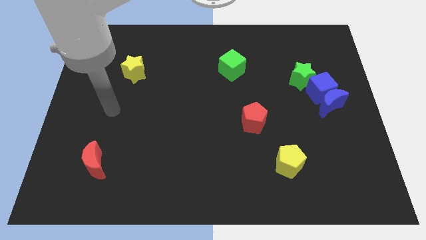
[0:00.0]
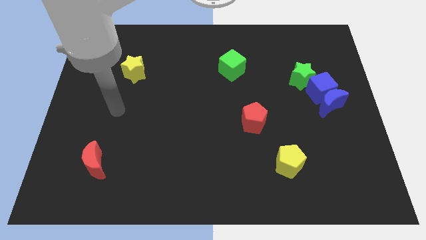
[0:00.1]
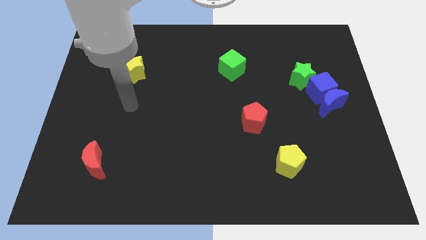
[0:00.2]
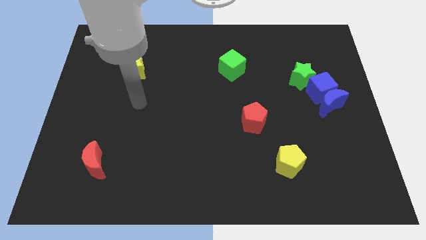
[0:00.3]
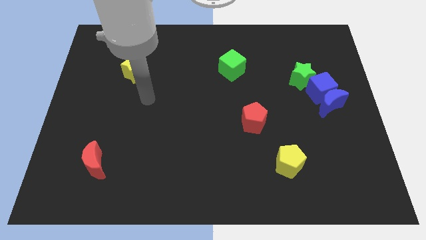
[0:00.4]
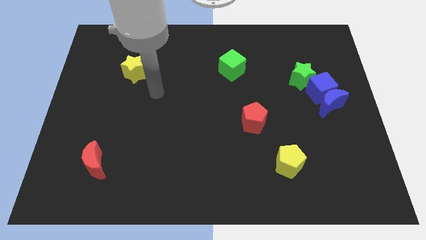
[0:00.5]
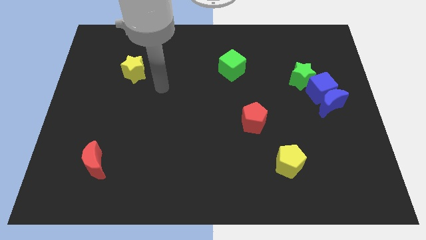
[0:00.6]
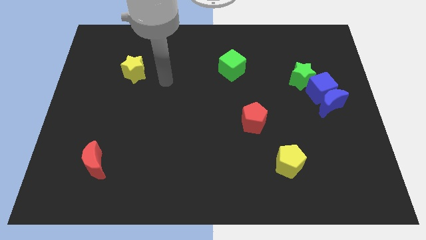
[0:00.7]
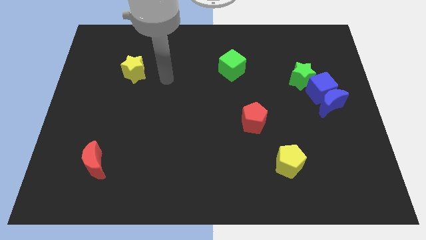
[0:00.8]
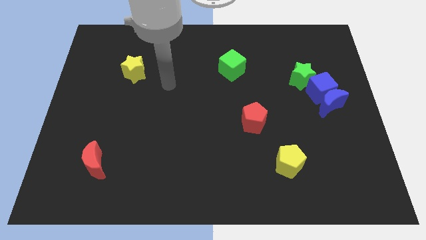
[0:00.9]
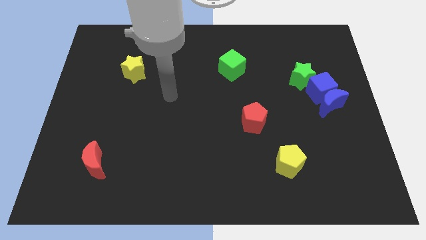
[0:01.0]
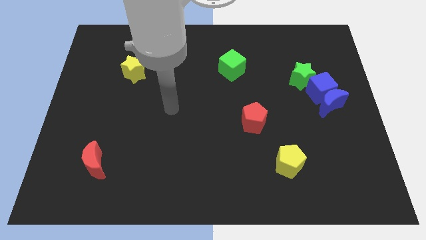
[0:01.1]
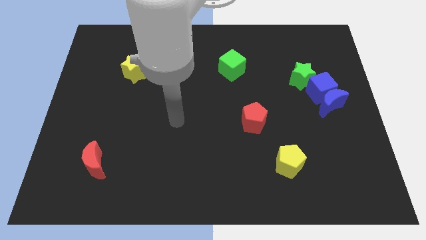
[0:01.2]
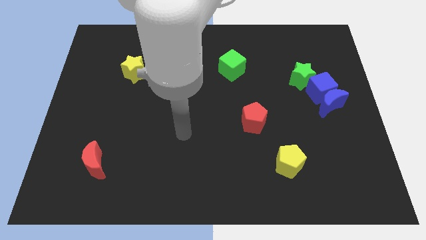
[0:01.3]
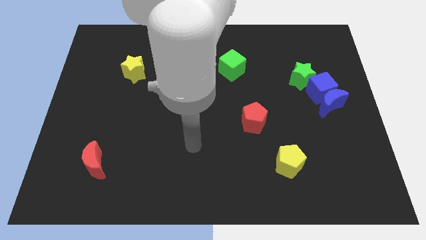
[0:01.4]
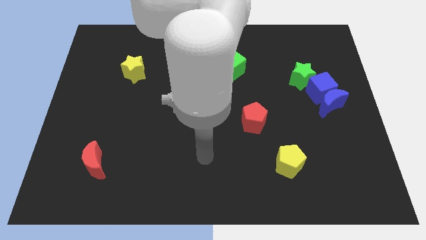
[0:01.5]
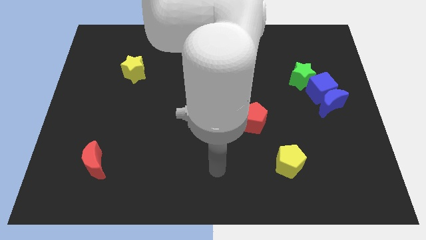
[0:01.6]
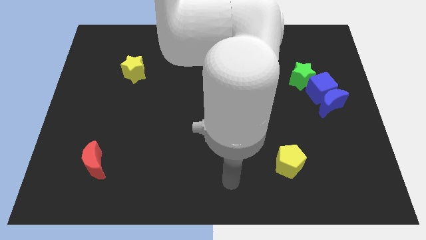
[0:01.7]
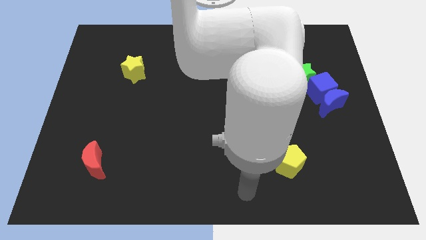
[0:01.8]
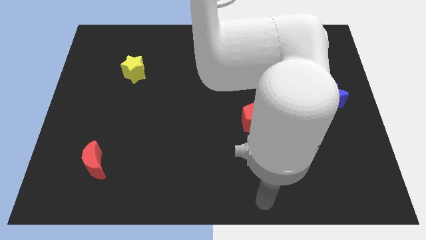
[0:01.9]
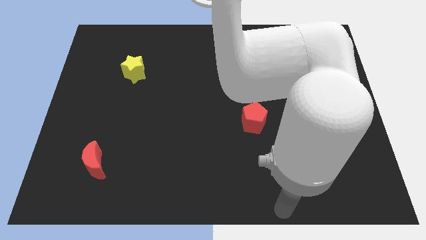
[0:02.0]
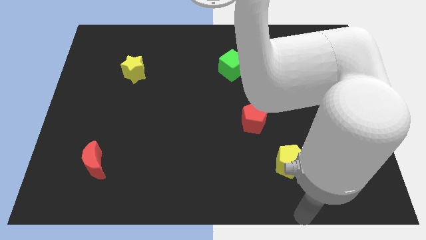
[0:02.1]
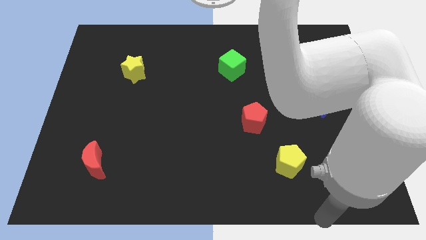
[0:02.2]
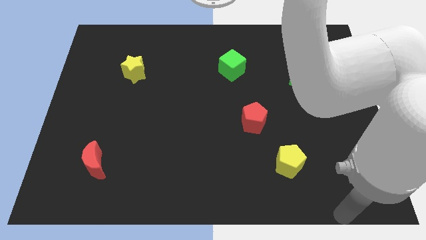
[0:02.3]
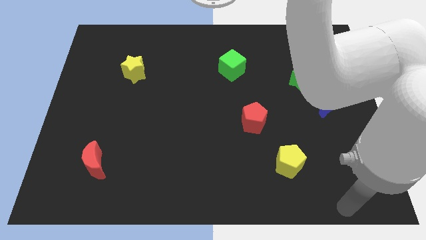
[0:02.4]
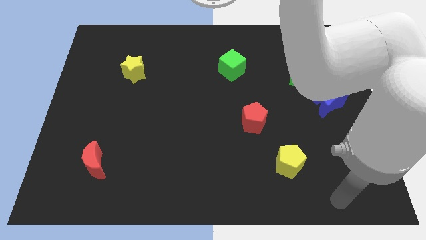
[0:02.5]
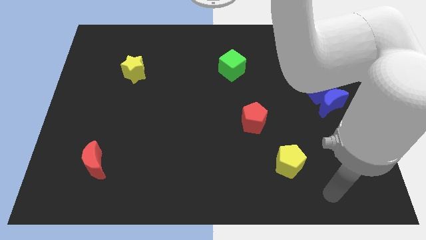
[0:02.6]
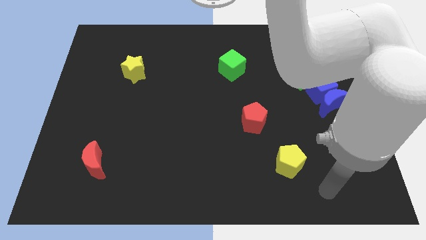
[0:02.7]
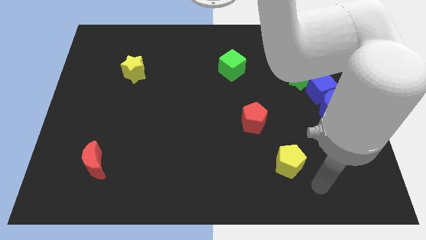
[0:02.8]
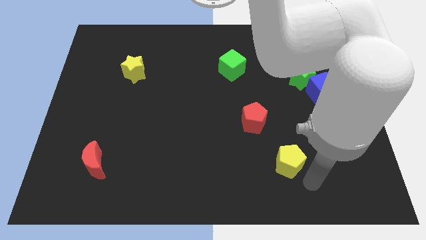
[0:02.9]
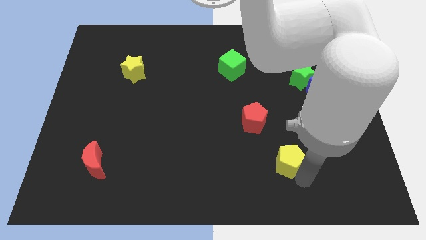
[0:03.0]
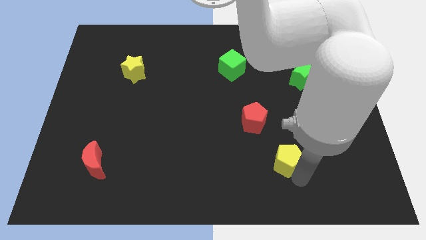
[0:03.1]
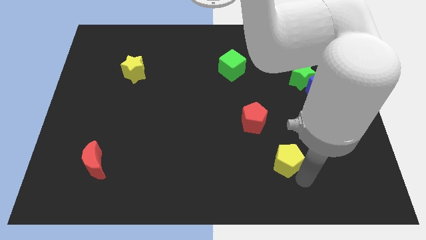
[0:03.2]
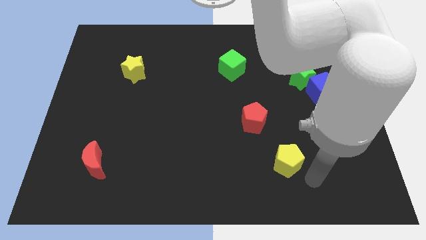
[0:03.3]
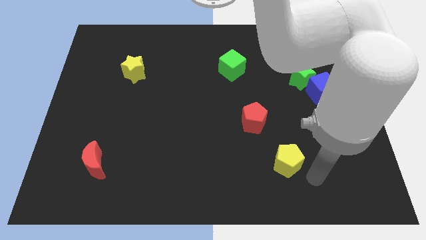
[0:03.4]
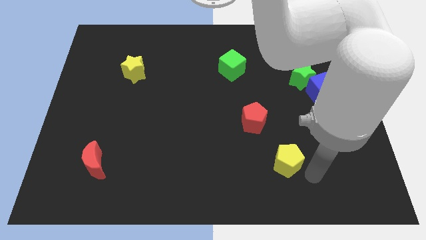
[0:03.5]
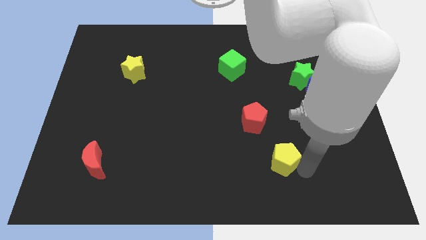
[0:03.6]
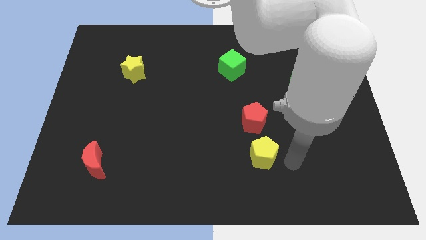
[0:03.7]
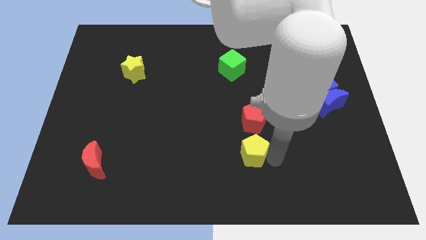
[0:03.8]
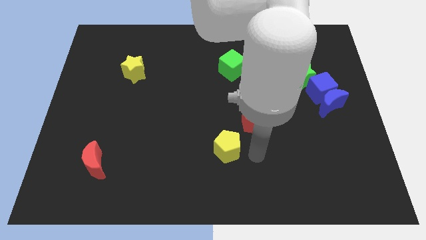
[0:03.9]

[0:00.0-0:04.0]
place the yellow pentagon below the red pentagon

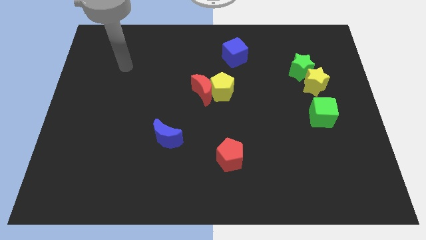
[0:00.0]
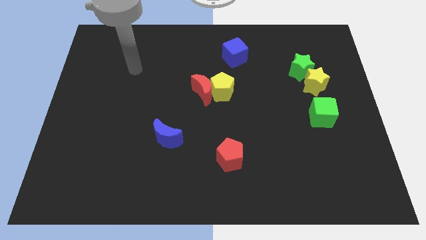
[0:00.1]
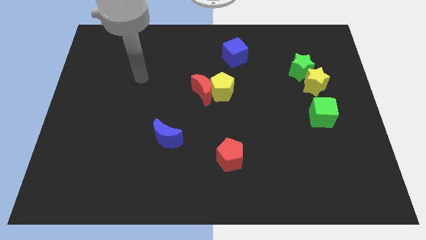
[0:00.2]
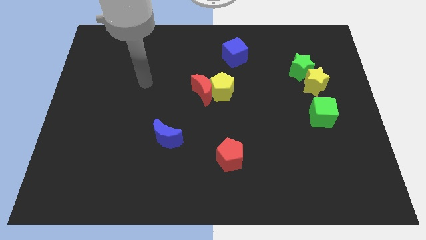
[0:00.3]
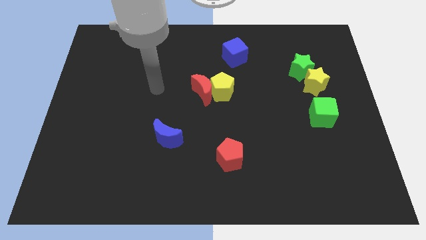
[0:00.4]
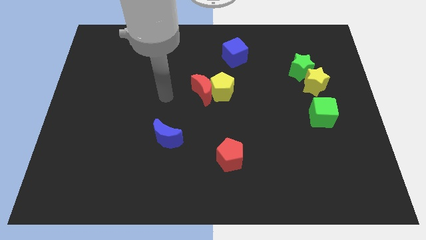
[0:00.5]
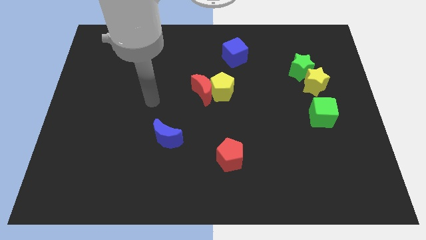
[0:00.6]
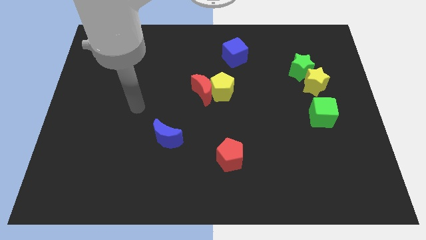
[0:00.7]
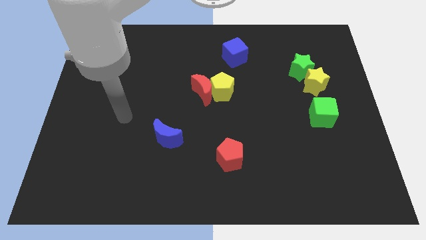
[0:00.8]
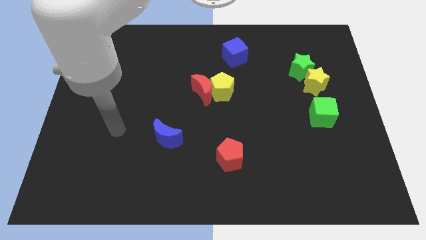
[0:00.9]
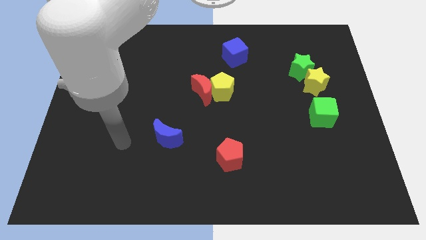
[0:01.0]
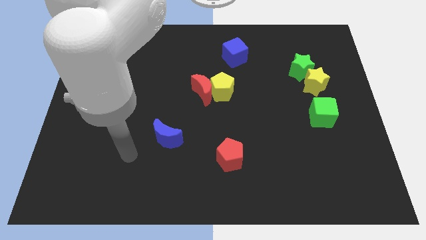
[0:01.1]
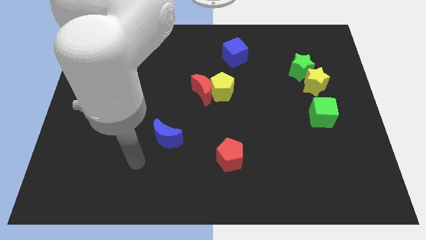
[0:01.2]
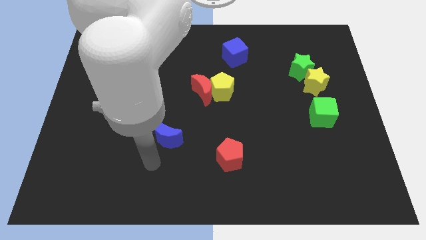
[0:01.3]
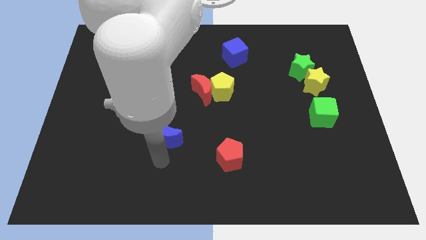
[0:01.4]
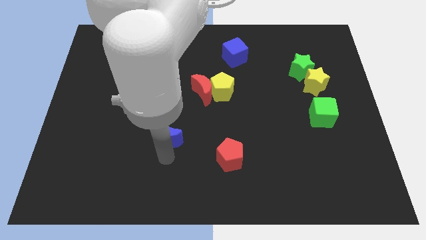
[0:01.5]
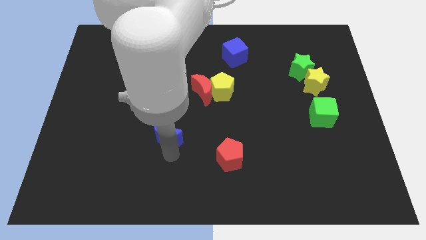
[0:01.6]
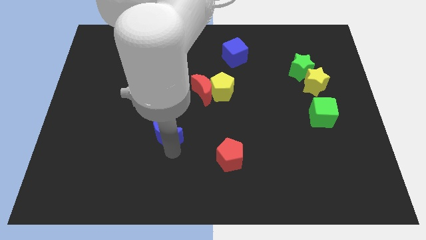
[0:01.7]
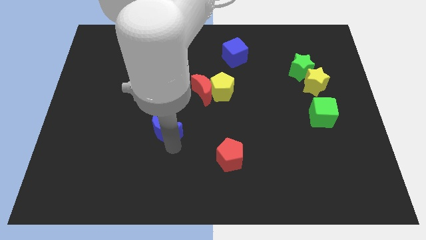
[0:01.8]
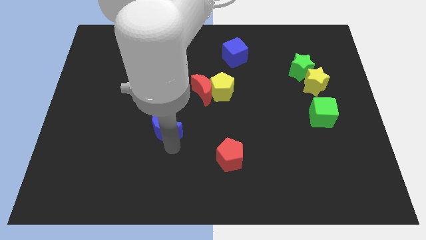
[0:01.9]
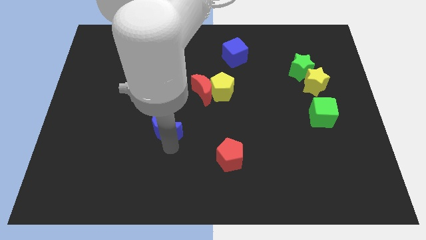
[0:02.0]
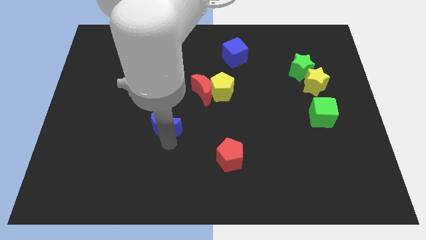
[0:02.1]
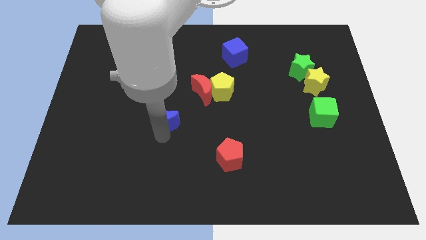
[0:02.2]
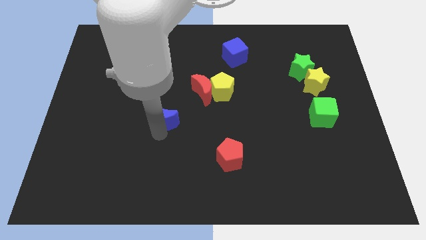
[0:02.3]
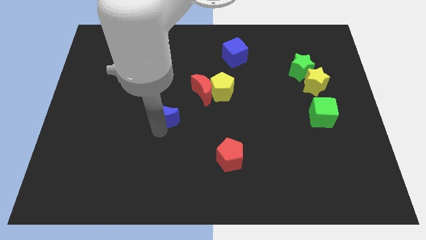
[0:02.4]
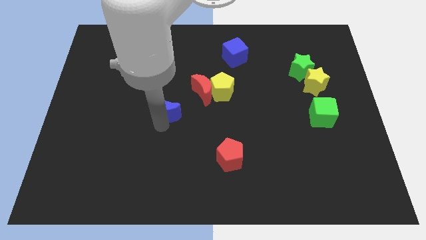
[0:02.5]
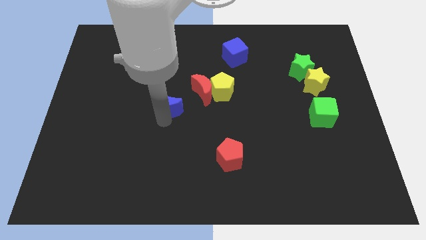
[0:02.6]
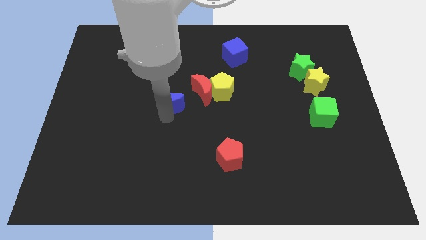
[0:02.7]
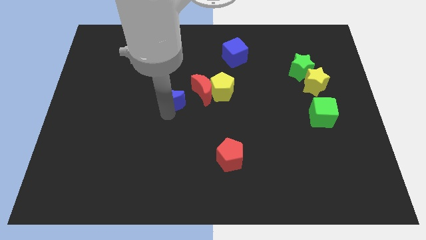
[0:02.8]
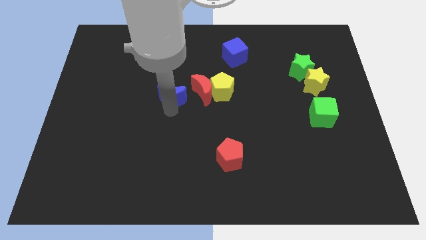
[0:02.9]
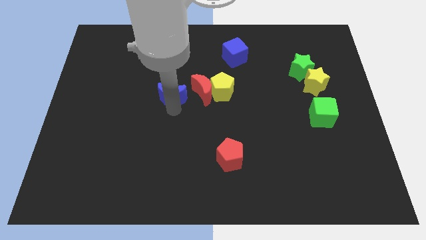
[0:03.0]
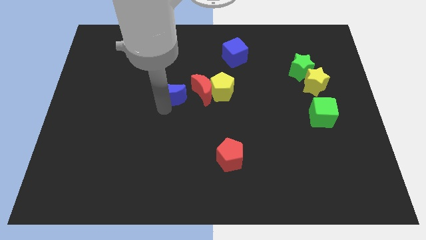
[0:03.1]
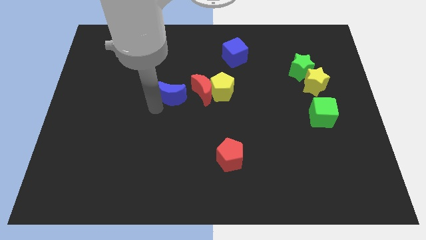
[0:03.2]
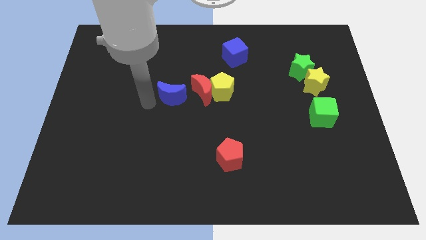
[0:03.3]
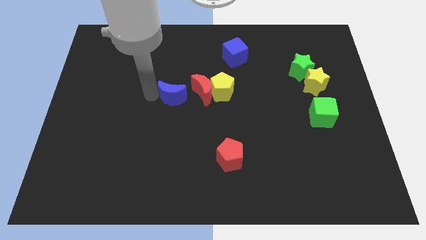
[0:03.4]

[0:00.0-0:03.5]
move the blue crescent to the left of the red crescent

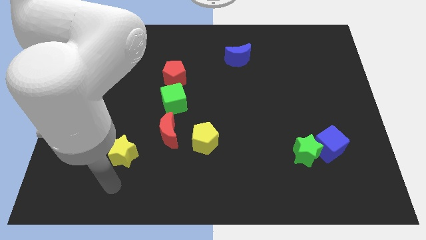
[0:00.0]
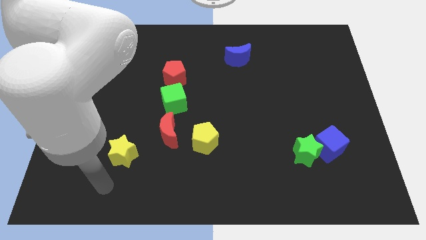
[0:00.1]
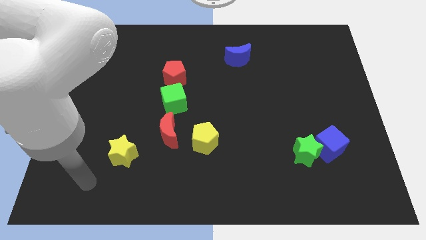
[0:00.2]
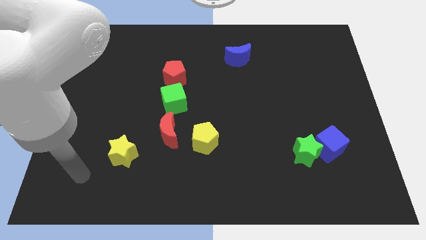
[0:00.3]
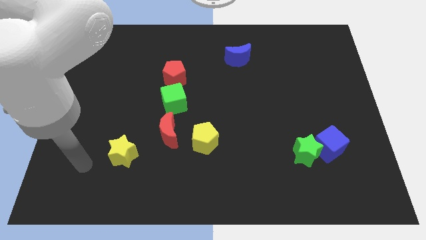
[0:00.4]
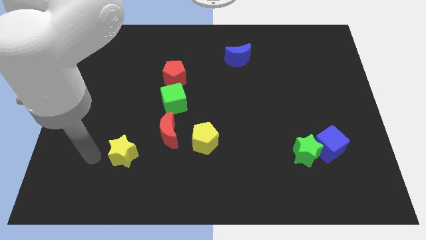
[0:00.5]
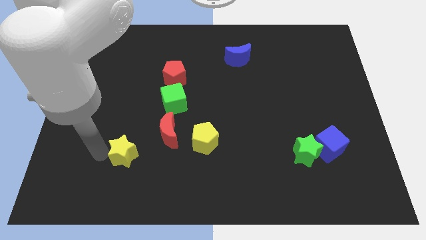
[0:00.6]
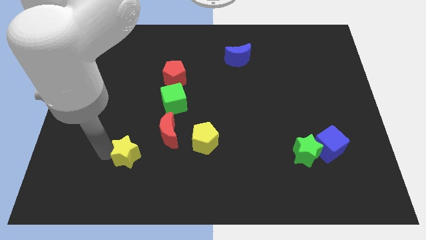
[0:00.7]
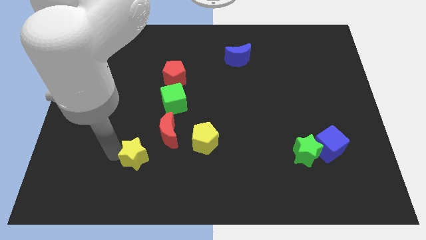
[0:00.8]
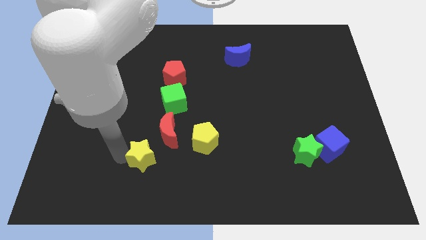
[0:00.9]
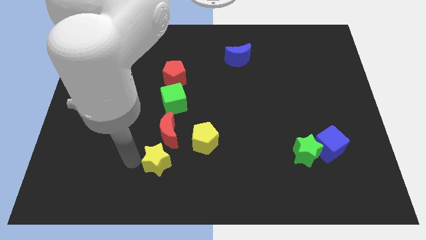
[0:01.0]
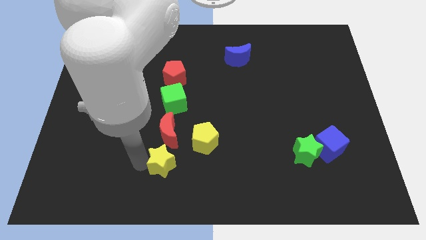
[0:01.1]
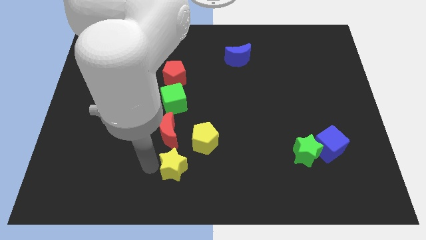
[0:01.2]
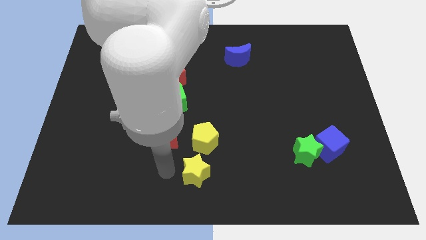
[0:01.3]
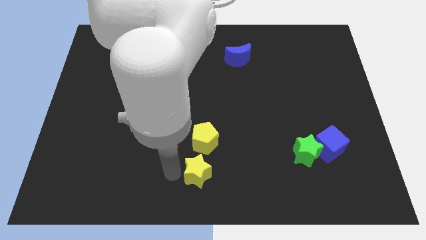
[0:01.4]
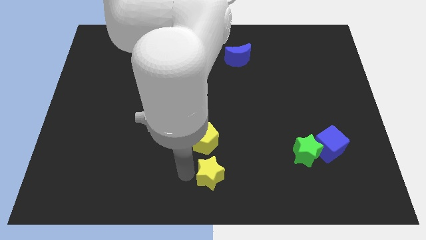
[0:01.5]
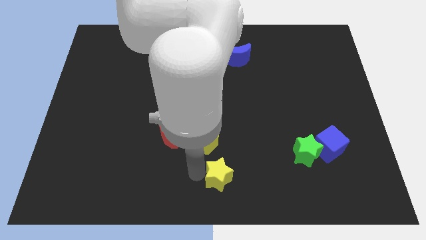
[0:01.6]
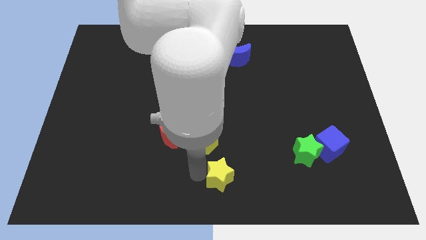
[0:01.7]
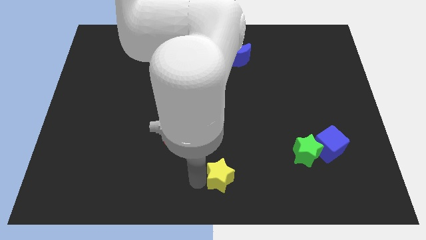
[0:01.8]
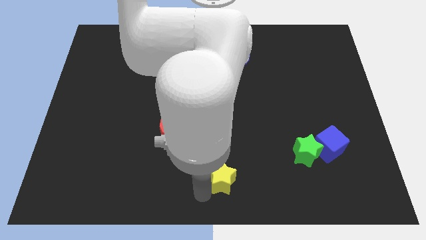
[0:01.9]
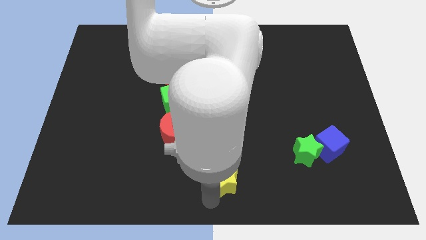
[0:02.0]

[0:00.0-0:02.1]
push yellow star towards bottom center
